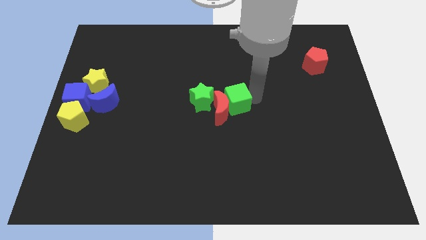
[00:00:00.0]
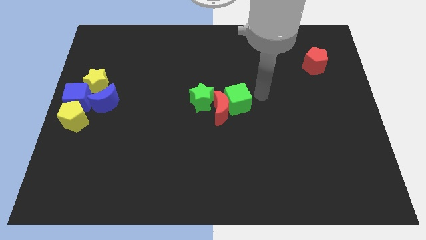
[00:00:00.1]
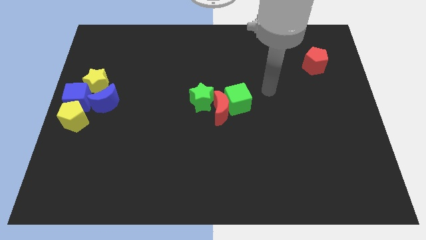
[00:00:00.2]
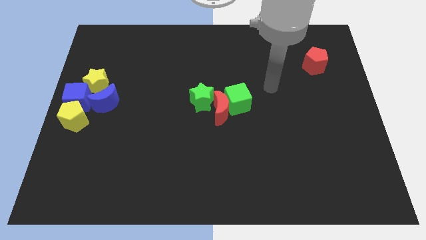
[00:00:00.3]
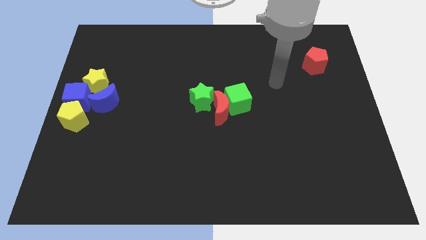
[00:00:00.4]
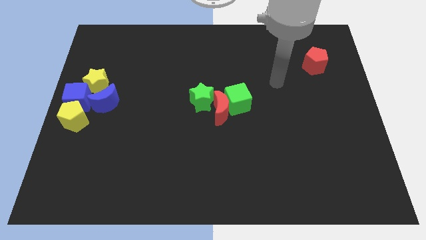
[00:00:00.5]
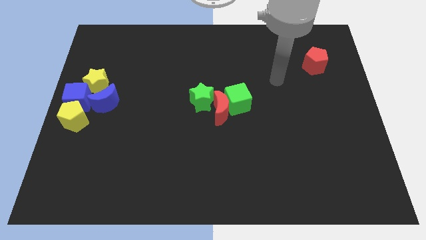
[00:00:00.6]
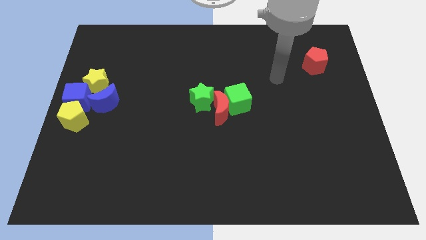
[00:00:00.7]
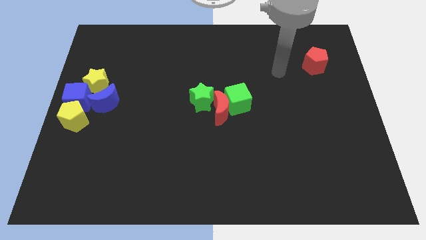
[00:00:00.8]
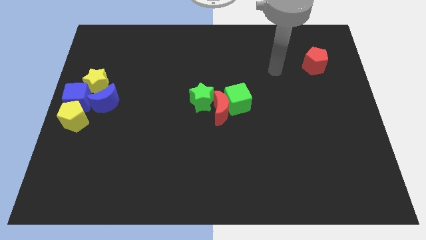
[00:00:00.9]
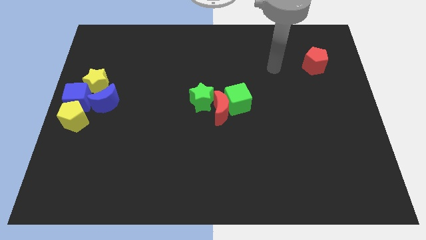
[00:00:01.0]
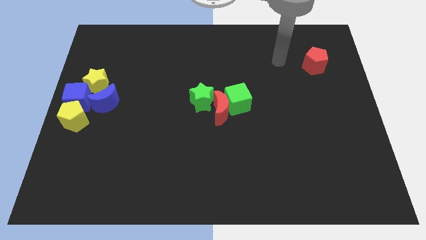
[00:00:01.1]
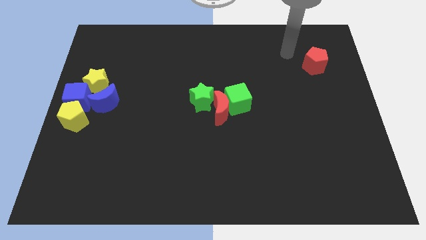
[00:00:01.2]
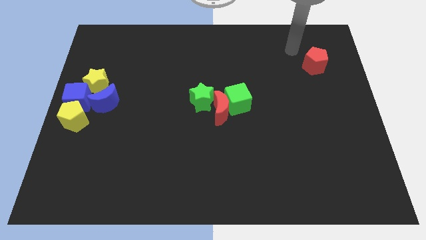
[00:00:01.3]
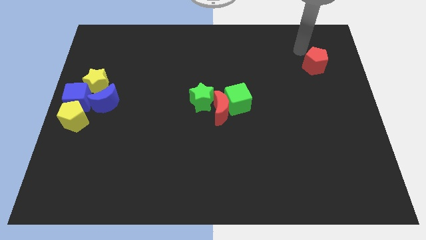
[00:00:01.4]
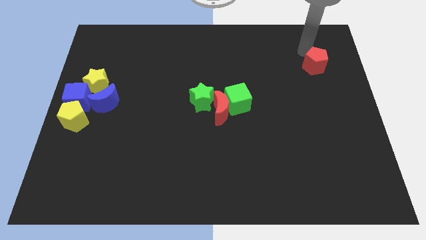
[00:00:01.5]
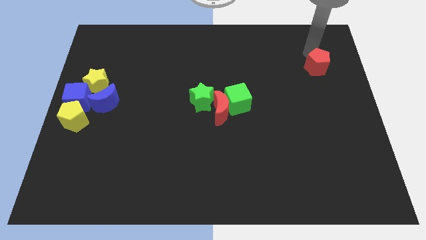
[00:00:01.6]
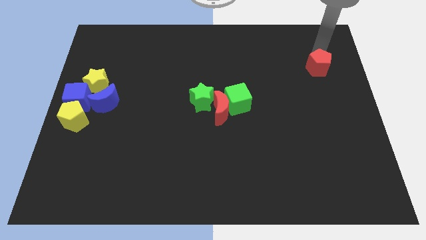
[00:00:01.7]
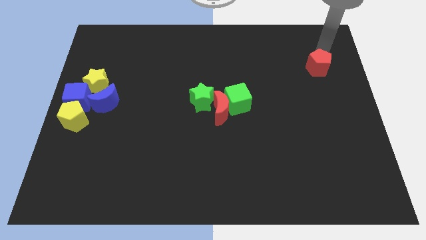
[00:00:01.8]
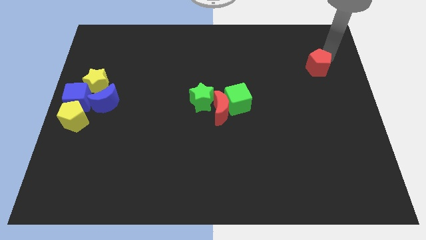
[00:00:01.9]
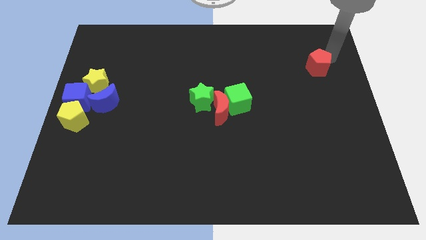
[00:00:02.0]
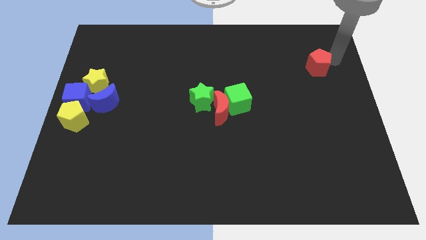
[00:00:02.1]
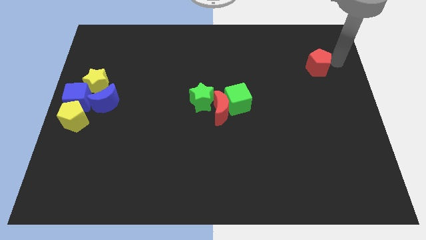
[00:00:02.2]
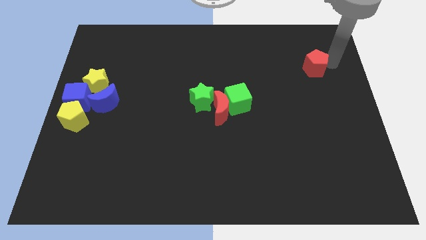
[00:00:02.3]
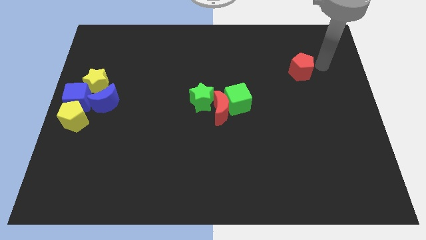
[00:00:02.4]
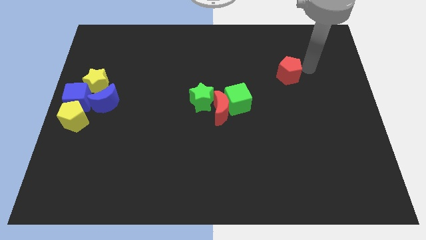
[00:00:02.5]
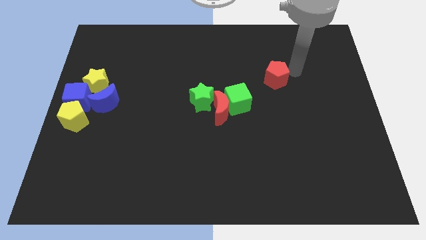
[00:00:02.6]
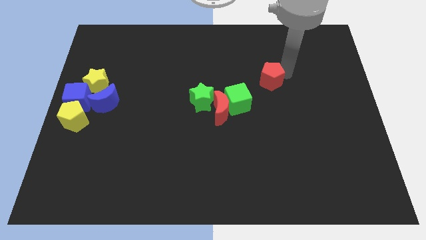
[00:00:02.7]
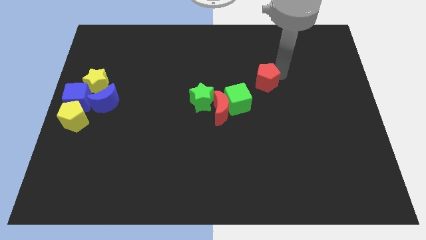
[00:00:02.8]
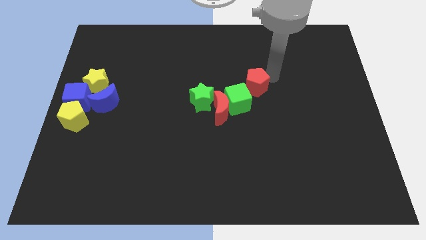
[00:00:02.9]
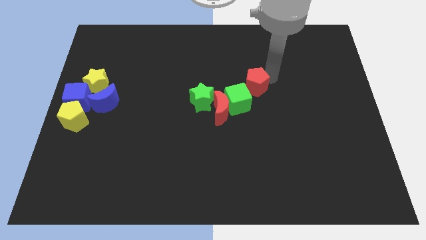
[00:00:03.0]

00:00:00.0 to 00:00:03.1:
push the red pentagon towards the green cube

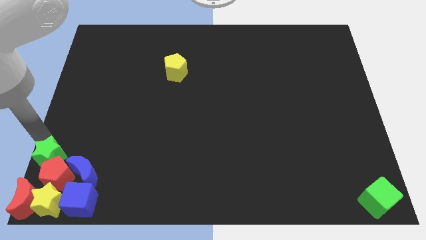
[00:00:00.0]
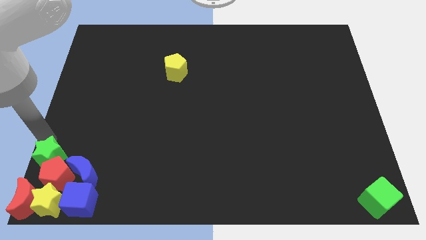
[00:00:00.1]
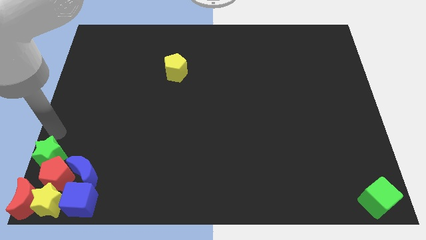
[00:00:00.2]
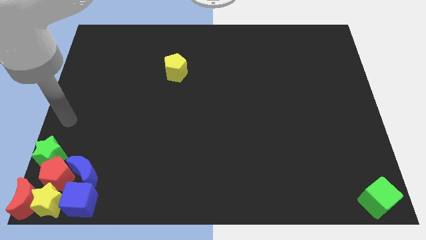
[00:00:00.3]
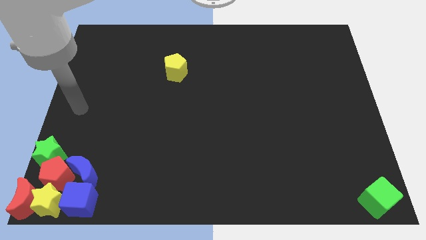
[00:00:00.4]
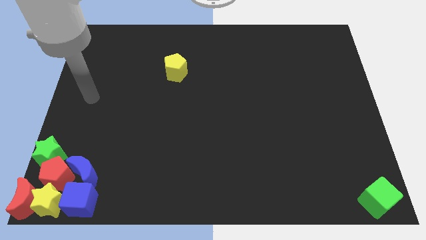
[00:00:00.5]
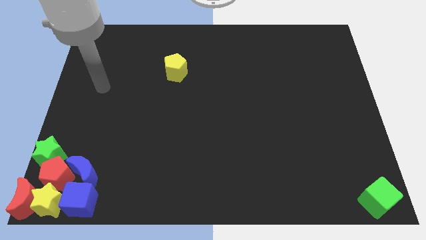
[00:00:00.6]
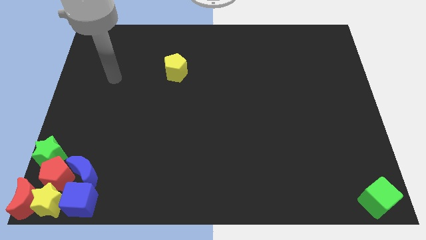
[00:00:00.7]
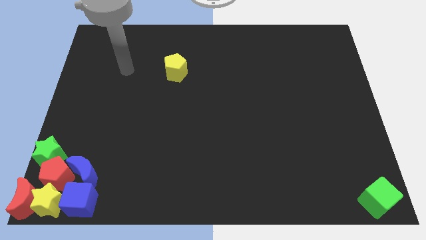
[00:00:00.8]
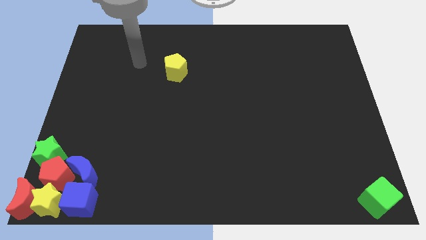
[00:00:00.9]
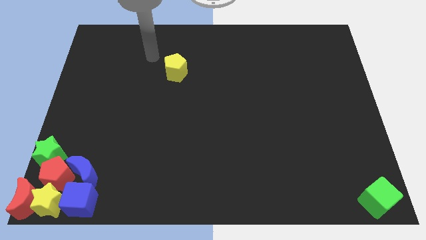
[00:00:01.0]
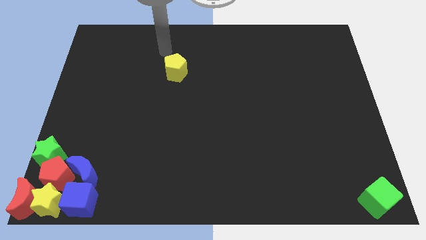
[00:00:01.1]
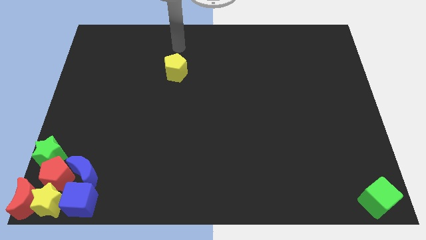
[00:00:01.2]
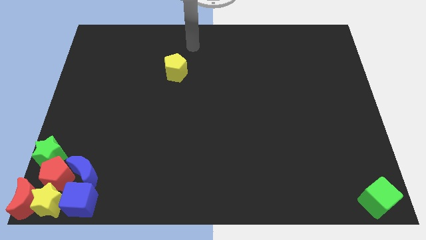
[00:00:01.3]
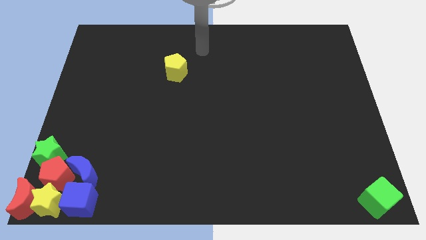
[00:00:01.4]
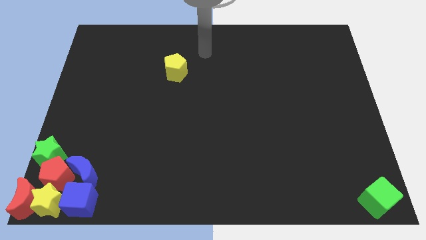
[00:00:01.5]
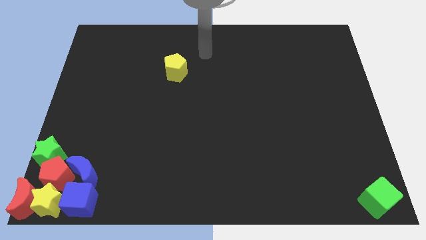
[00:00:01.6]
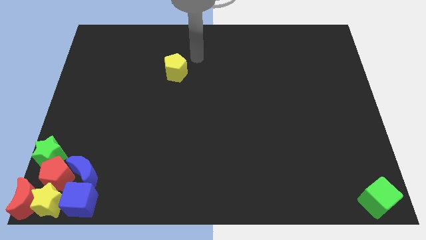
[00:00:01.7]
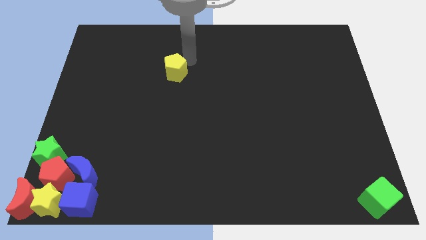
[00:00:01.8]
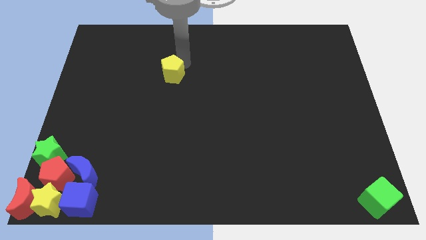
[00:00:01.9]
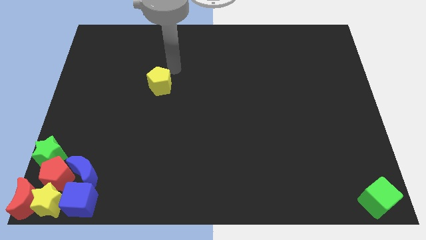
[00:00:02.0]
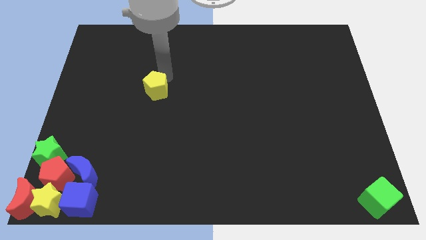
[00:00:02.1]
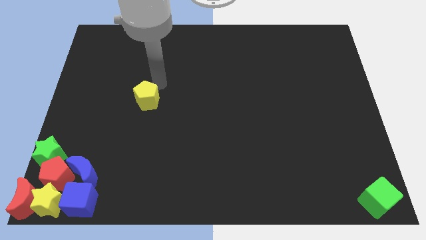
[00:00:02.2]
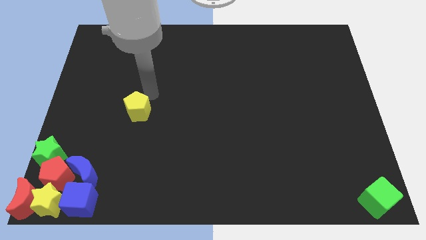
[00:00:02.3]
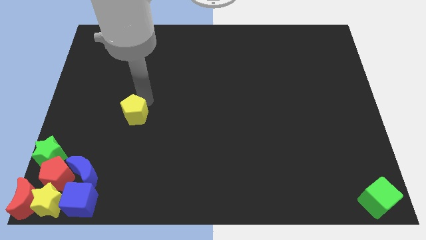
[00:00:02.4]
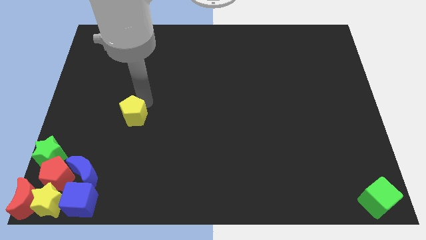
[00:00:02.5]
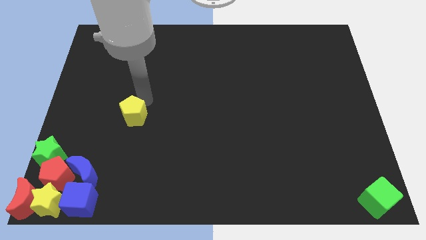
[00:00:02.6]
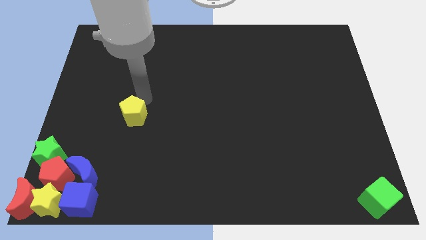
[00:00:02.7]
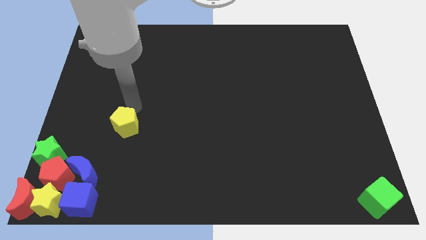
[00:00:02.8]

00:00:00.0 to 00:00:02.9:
move the arm away from the green star

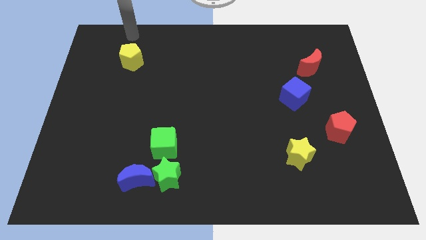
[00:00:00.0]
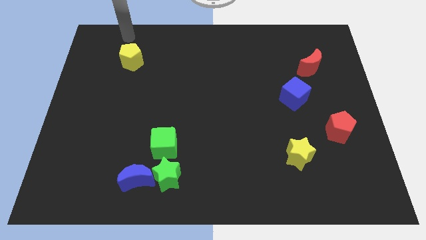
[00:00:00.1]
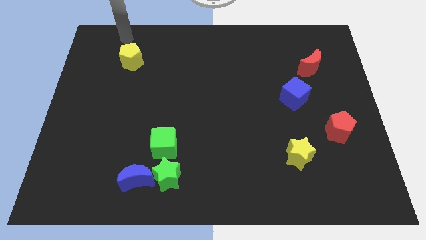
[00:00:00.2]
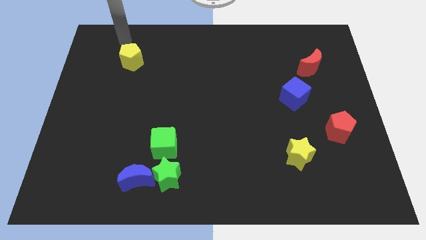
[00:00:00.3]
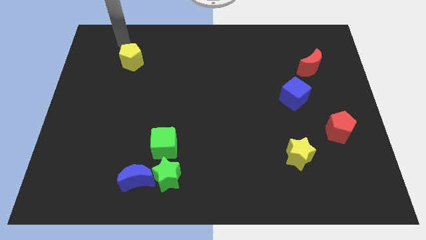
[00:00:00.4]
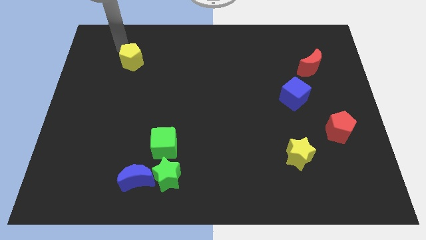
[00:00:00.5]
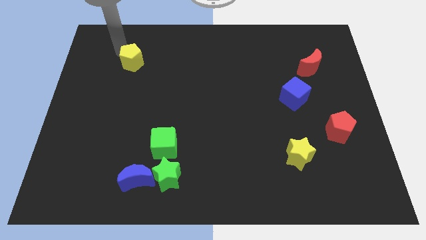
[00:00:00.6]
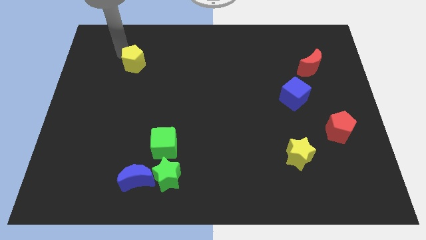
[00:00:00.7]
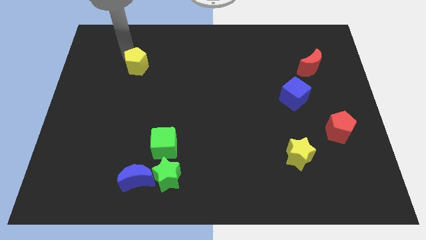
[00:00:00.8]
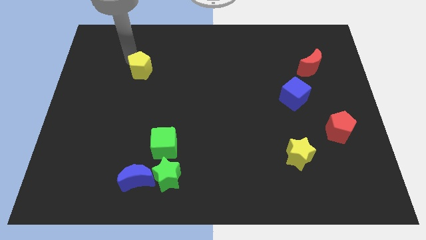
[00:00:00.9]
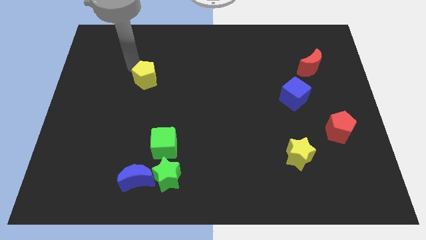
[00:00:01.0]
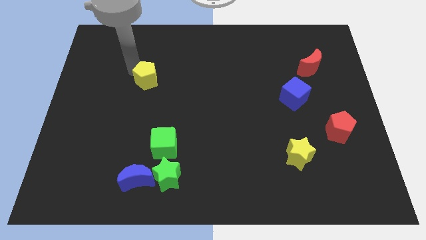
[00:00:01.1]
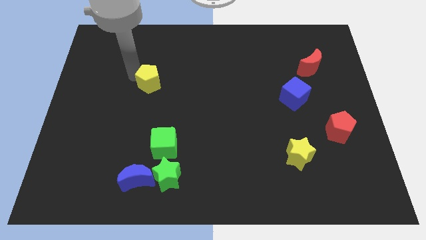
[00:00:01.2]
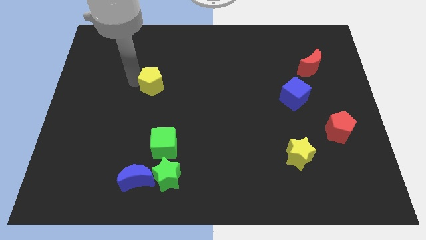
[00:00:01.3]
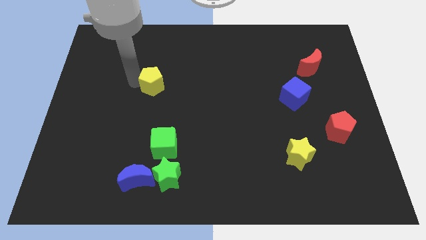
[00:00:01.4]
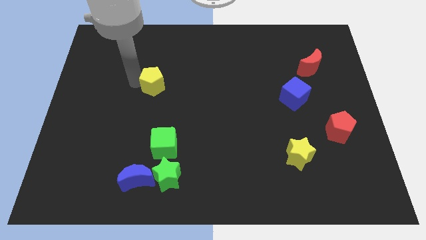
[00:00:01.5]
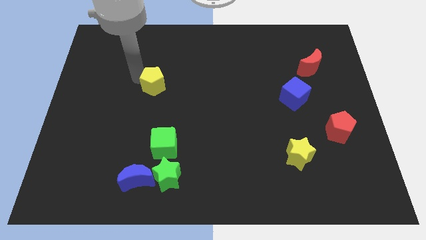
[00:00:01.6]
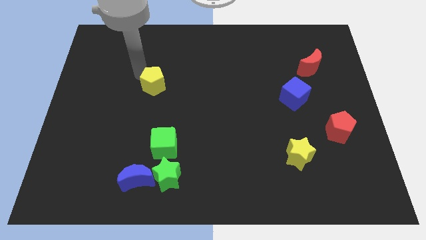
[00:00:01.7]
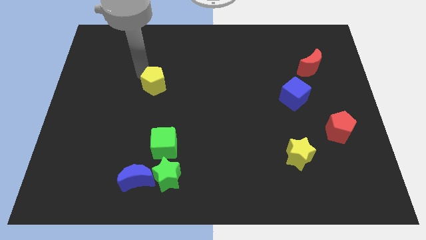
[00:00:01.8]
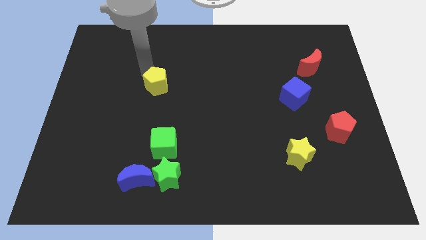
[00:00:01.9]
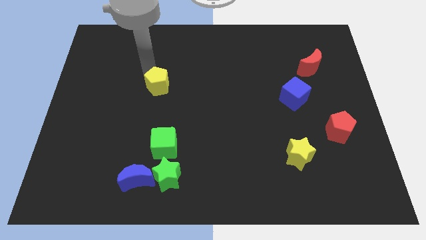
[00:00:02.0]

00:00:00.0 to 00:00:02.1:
place the yellow pentagon vertically above the green cube

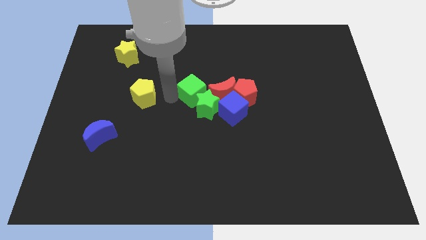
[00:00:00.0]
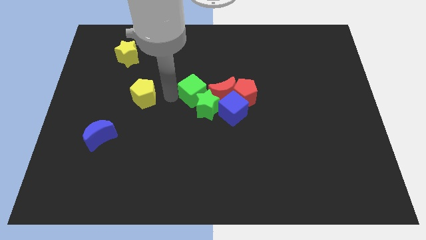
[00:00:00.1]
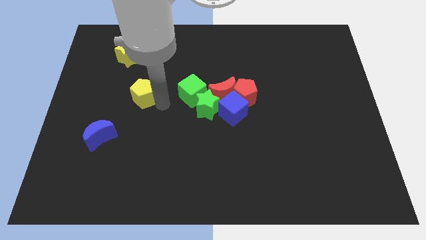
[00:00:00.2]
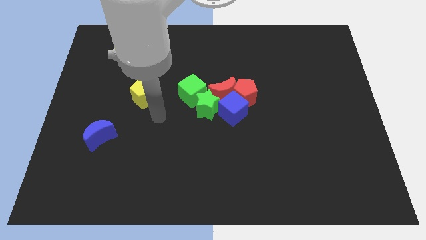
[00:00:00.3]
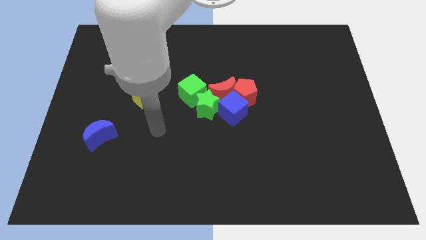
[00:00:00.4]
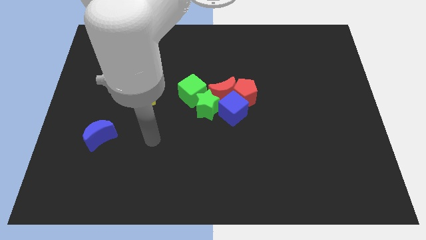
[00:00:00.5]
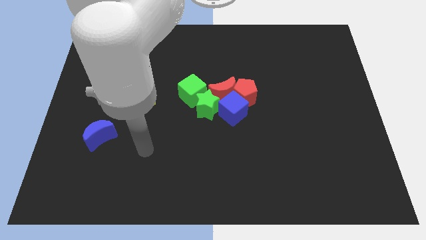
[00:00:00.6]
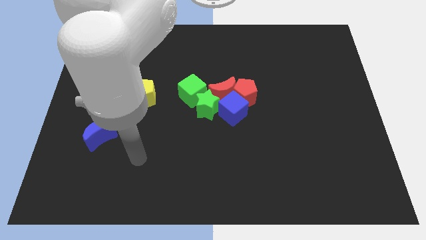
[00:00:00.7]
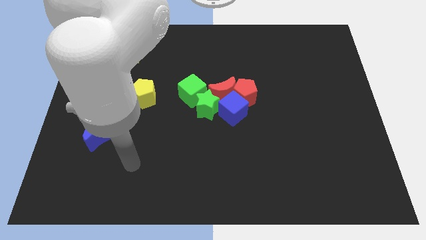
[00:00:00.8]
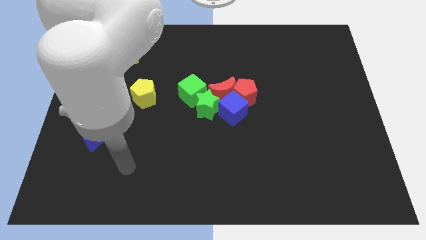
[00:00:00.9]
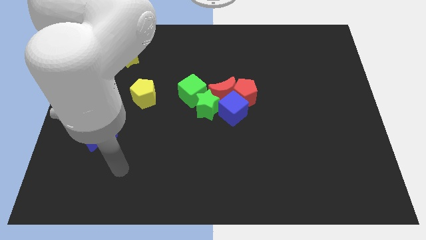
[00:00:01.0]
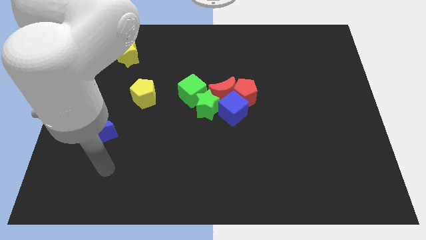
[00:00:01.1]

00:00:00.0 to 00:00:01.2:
move the arm away from the green cube
